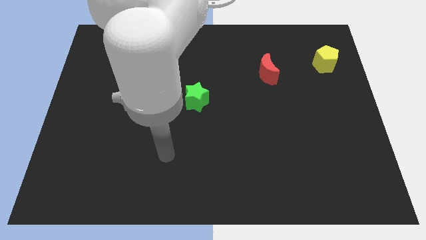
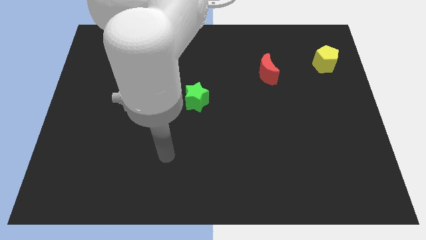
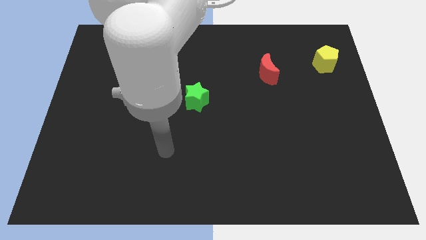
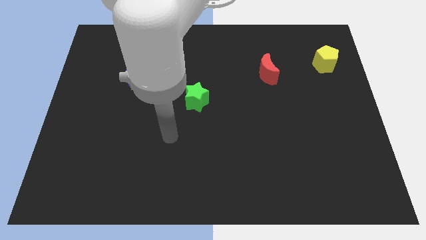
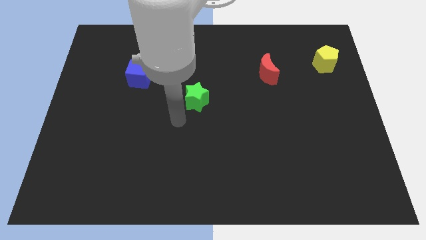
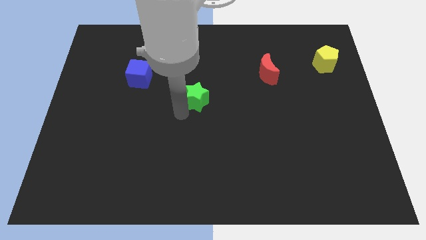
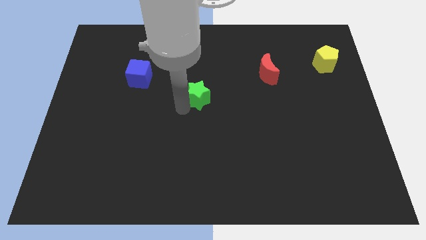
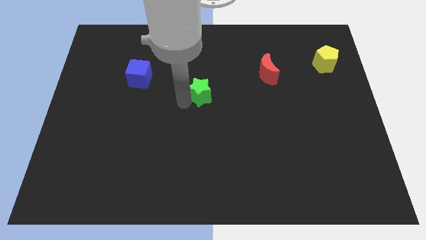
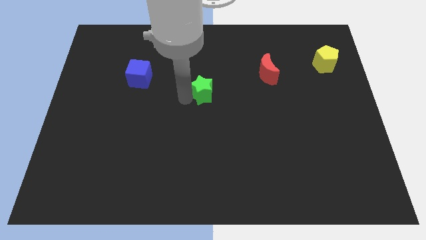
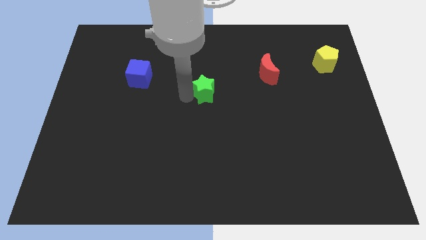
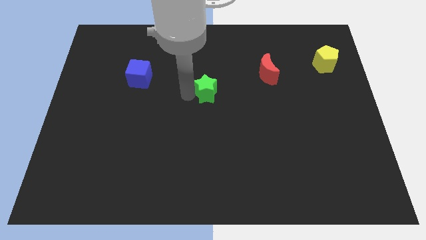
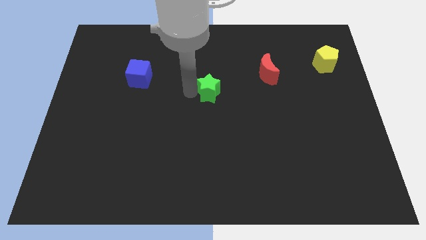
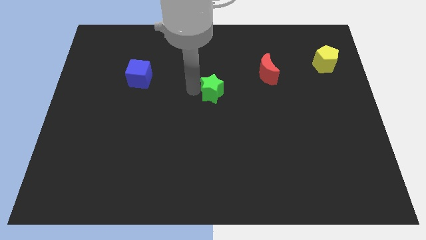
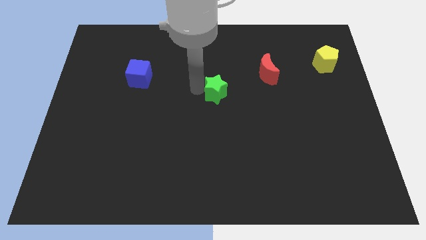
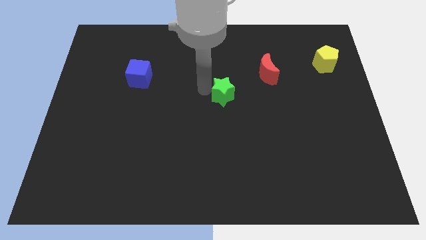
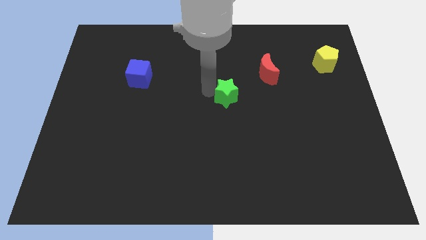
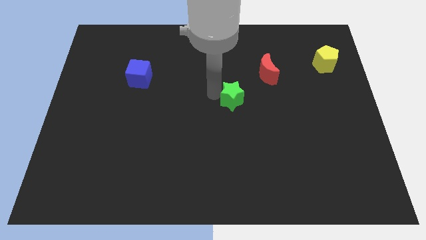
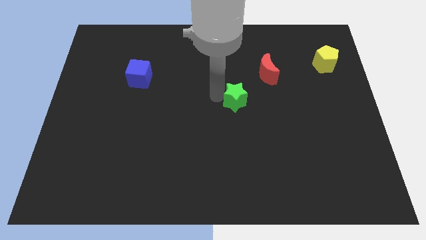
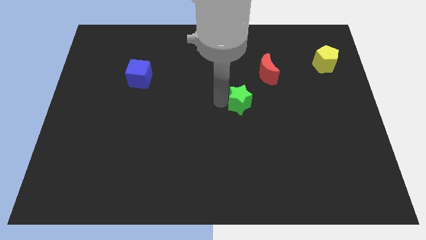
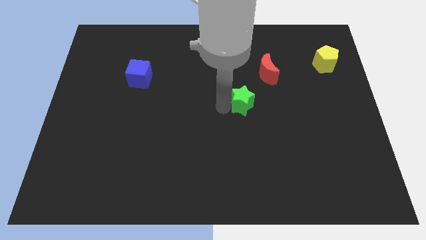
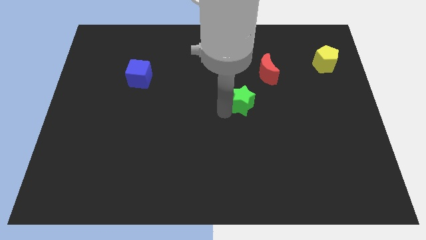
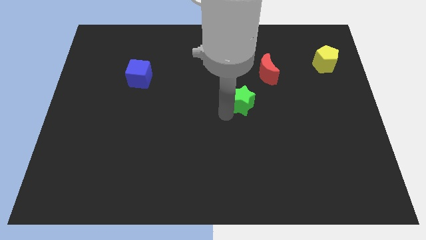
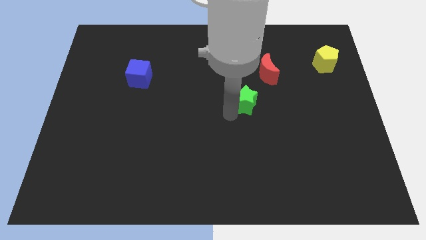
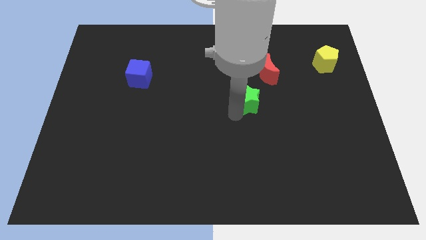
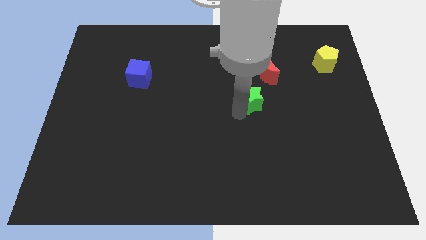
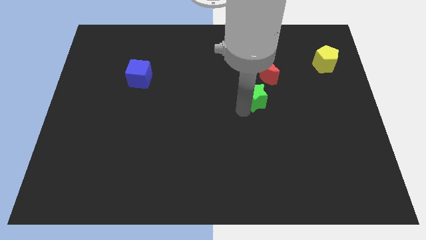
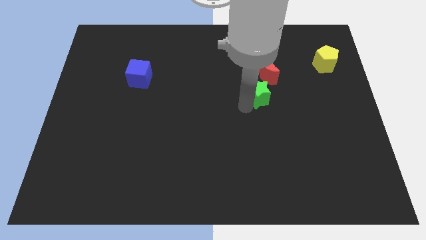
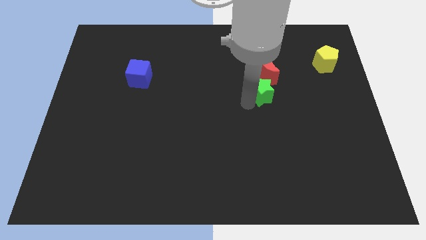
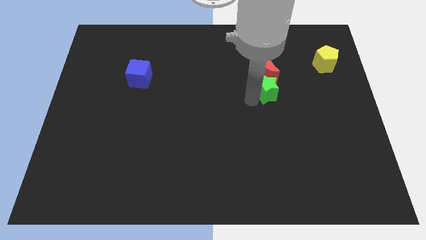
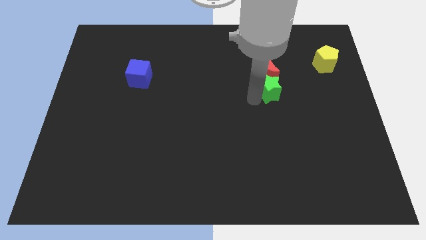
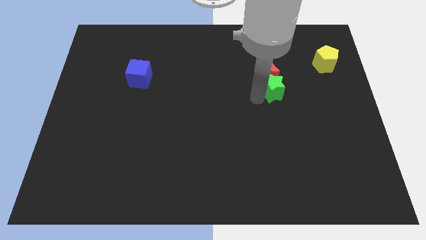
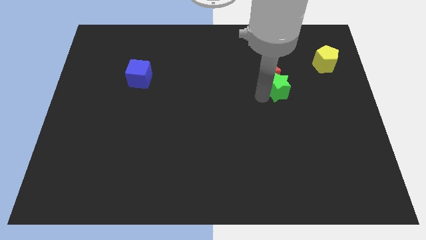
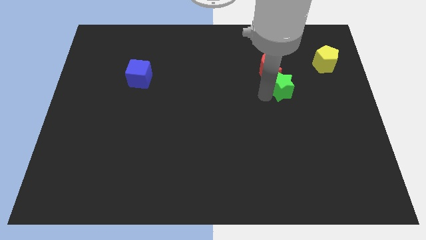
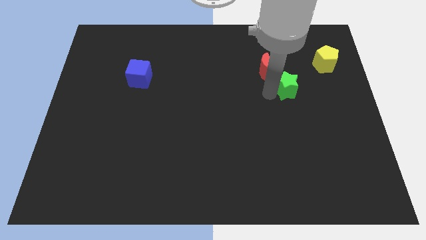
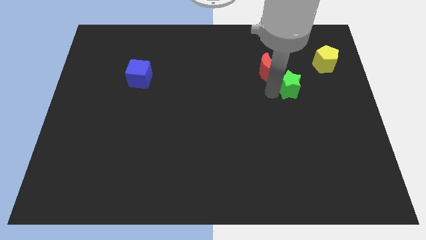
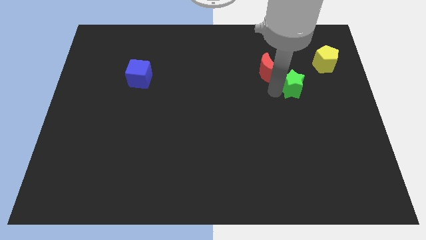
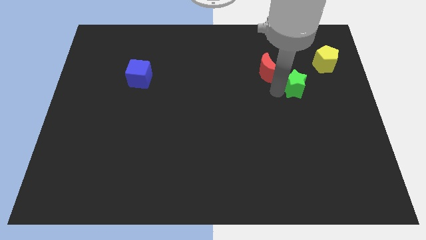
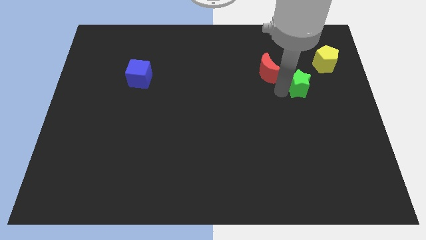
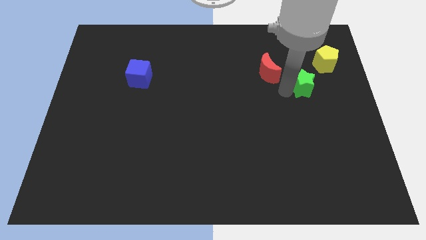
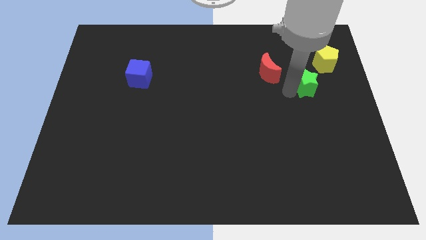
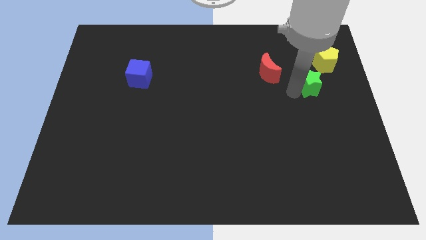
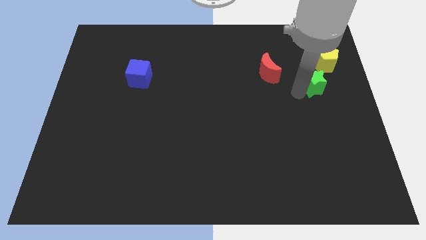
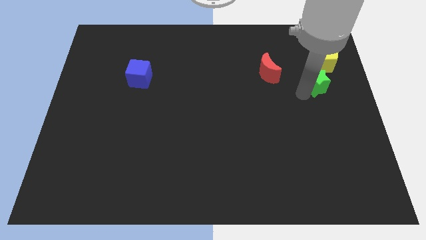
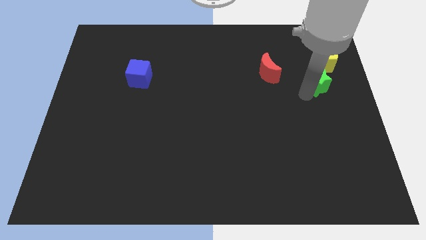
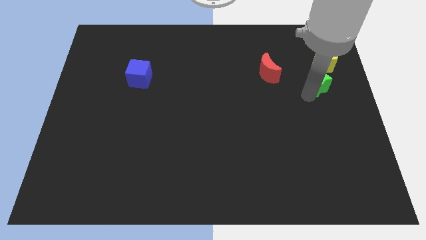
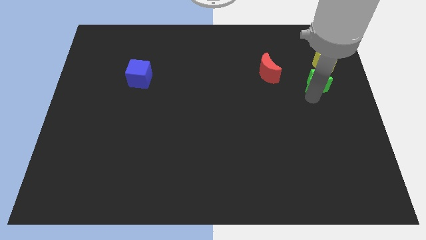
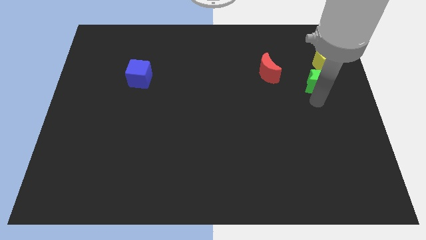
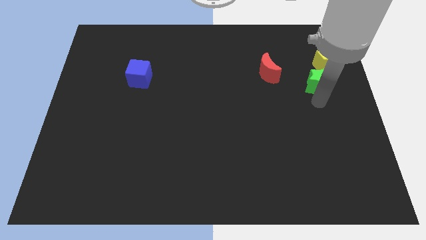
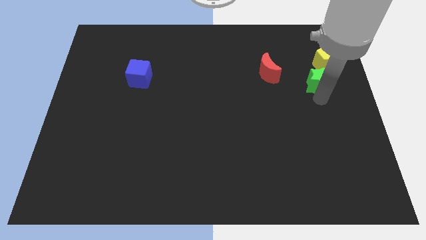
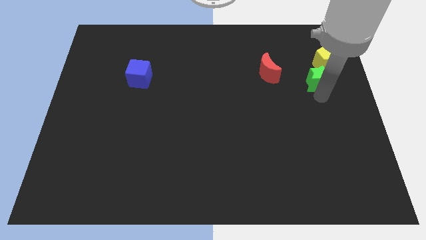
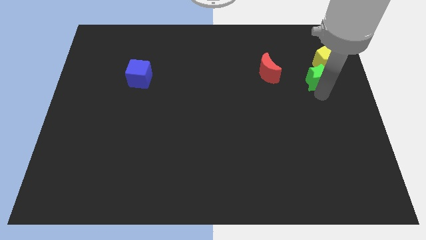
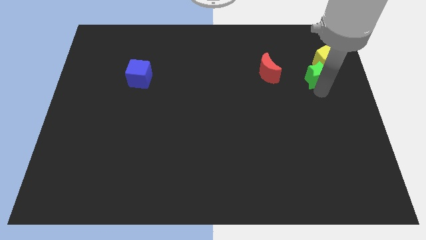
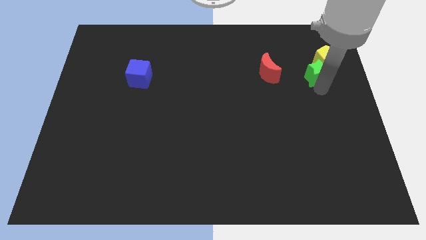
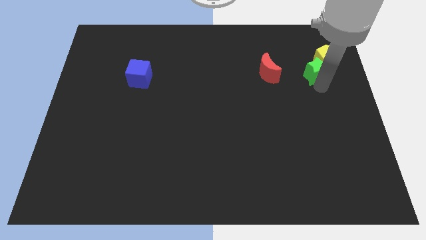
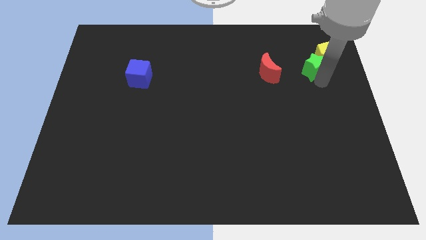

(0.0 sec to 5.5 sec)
put the green block next to the yellow block

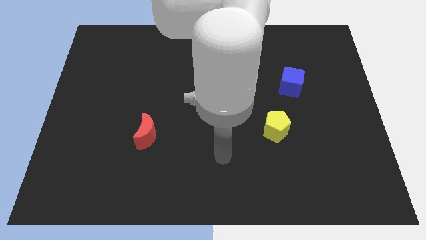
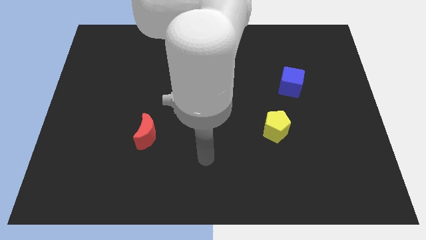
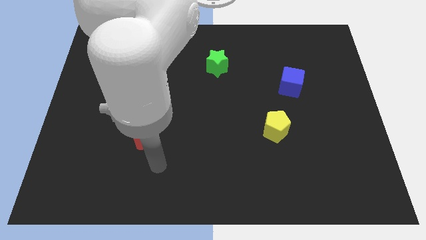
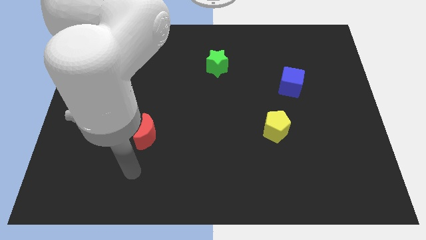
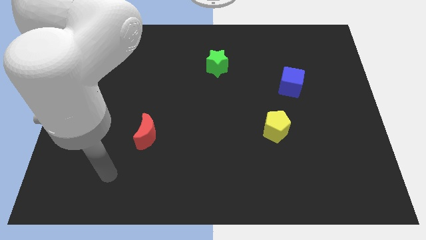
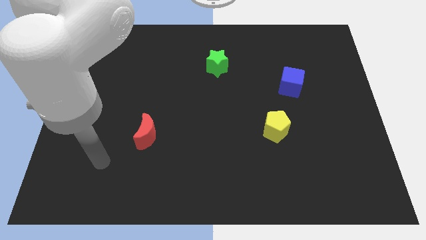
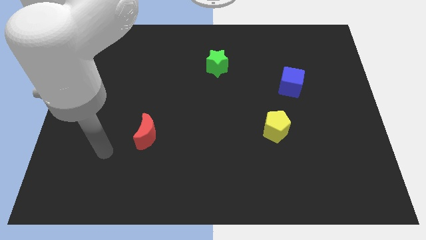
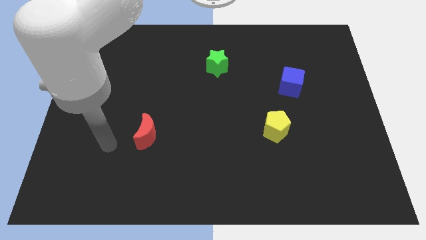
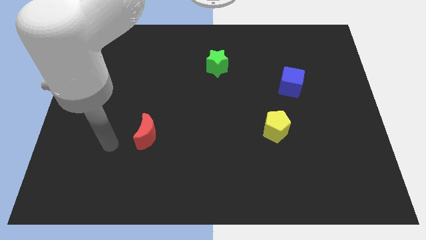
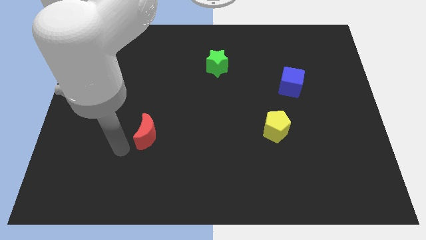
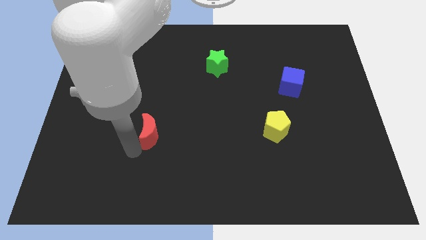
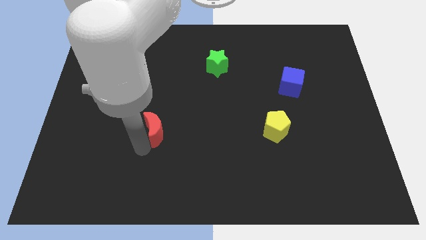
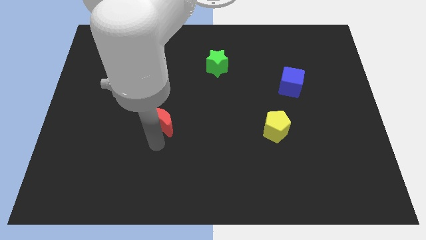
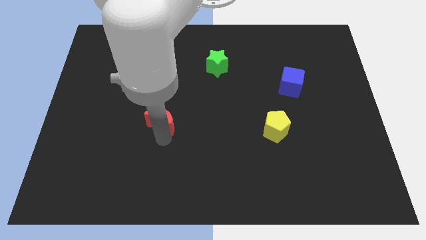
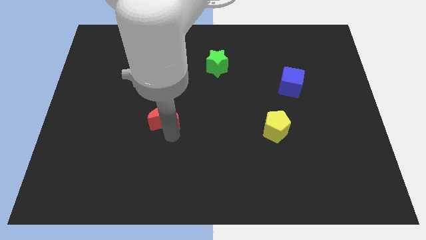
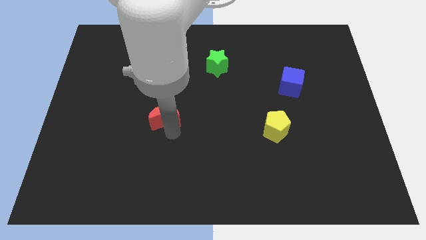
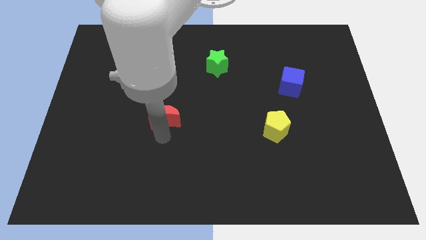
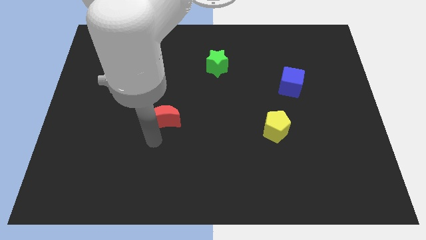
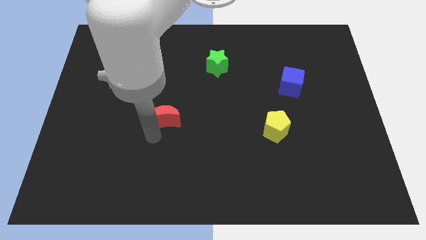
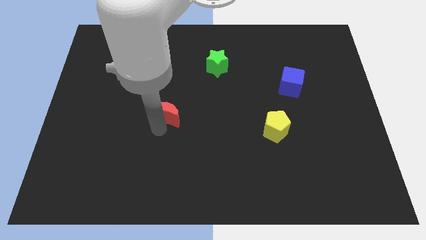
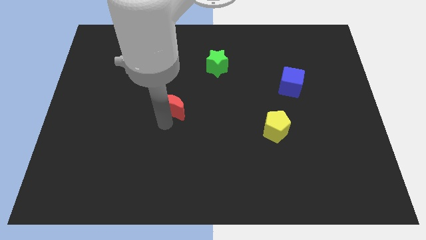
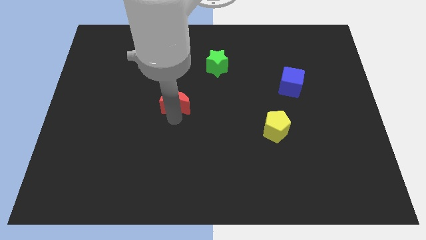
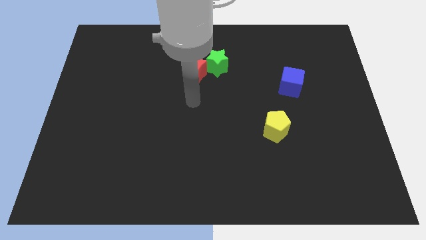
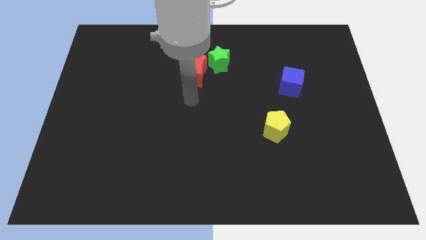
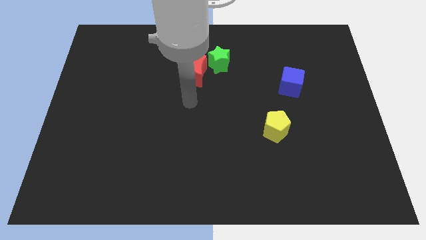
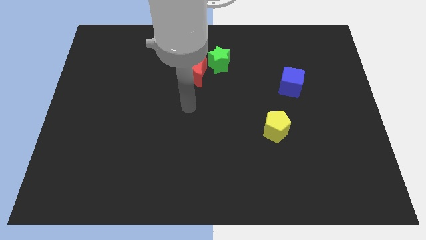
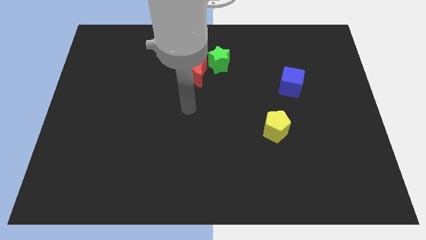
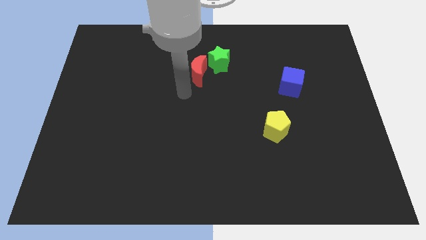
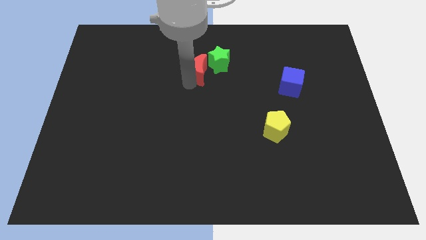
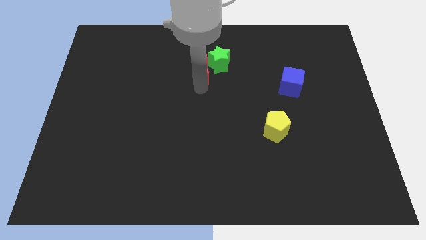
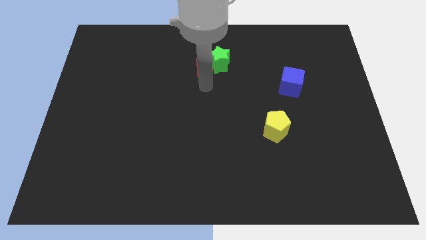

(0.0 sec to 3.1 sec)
push the red moon to the green block

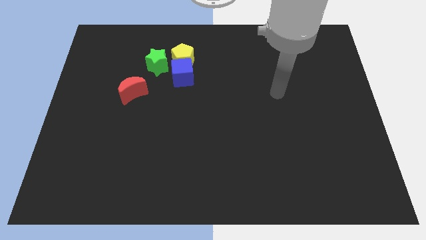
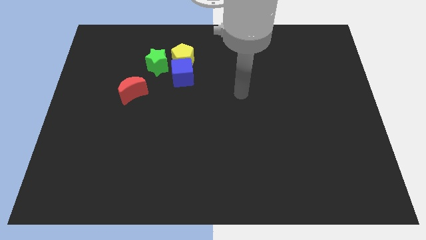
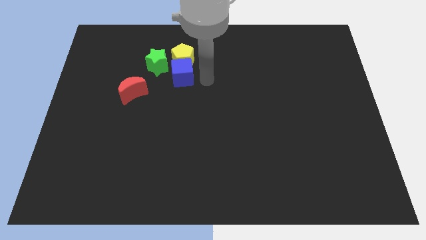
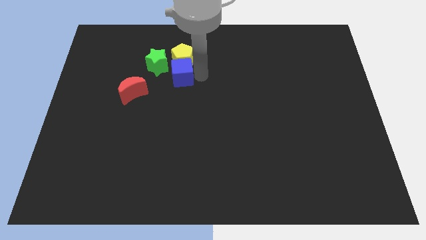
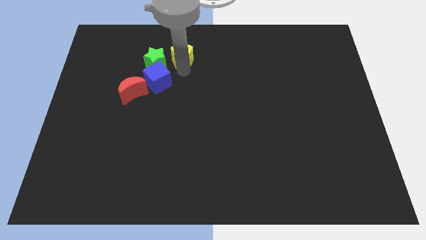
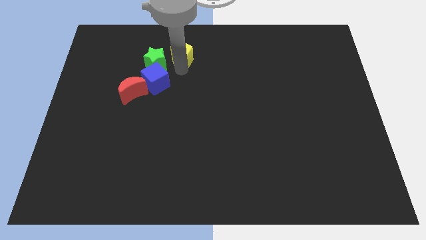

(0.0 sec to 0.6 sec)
put the cube towards the star
